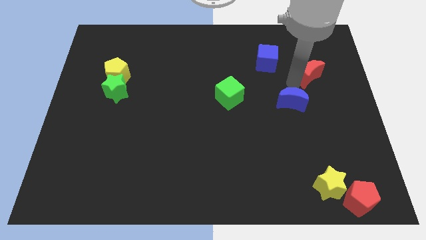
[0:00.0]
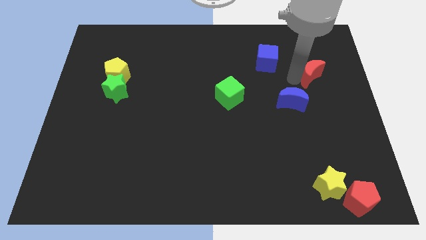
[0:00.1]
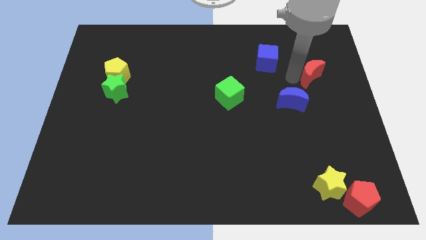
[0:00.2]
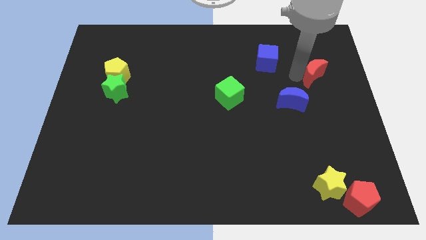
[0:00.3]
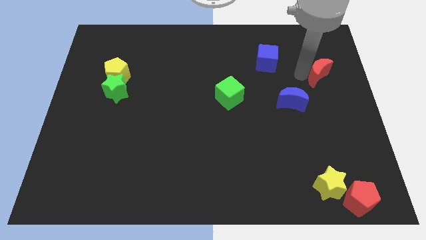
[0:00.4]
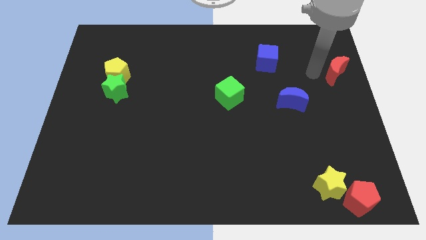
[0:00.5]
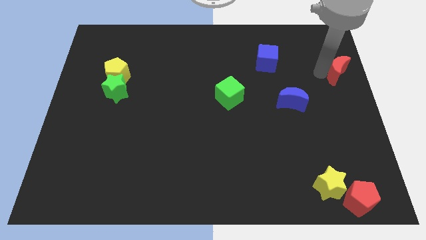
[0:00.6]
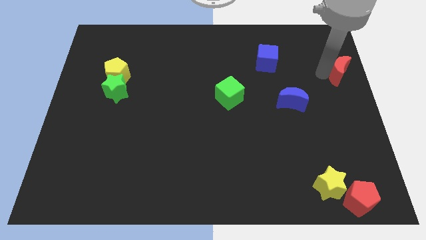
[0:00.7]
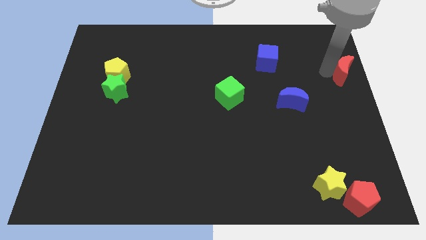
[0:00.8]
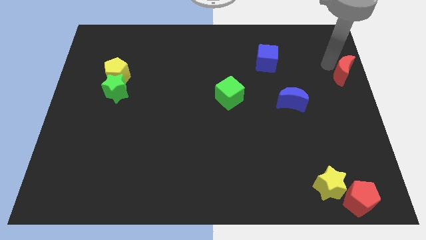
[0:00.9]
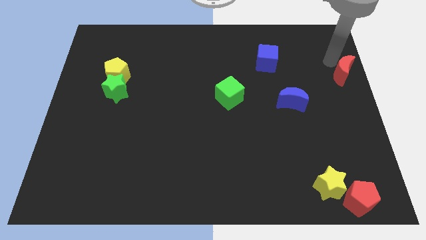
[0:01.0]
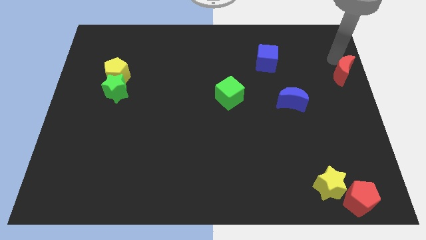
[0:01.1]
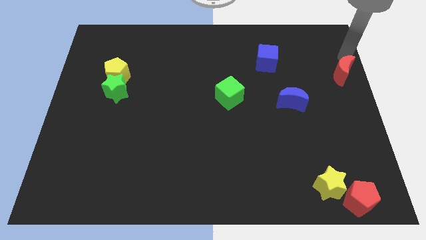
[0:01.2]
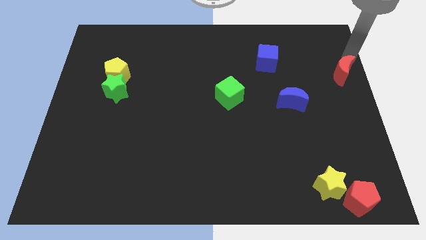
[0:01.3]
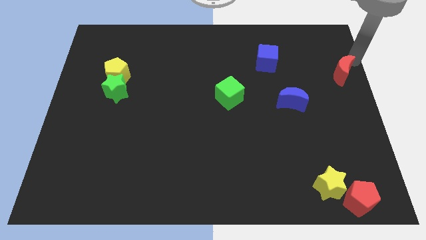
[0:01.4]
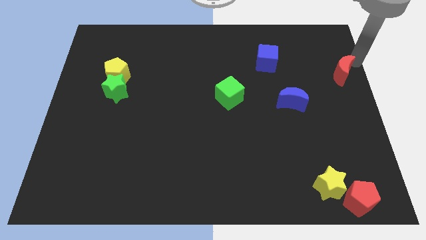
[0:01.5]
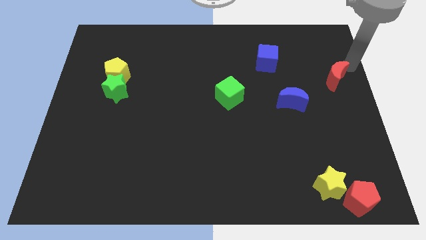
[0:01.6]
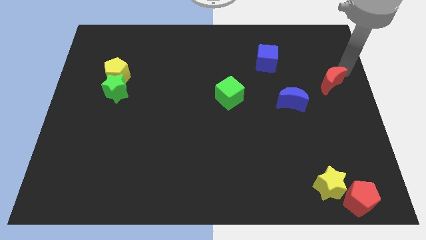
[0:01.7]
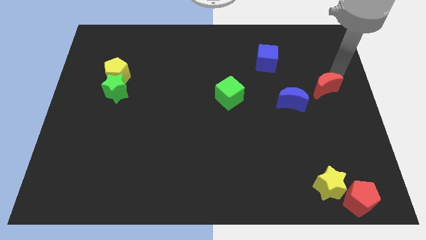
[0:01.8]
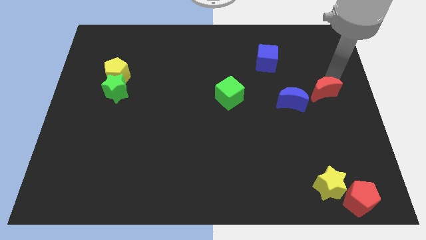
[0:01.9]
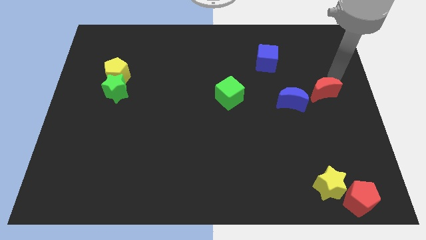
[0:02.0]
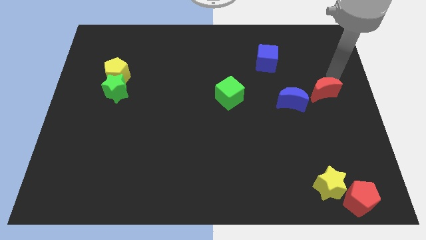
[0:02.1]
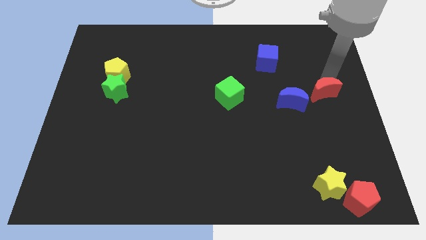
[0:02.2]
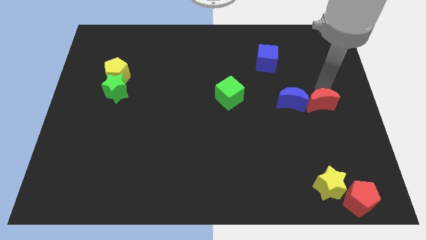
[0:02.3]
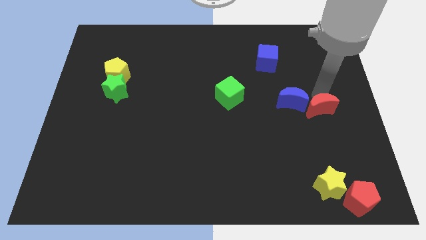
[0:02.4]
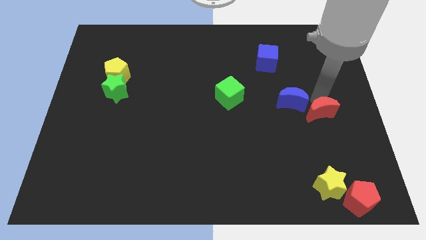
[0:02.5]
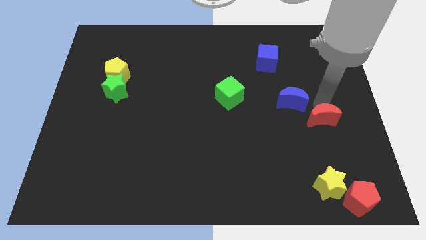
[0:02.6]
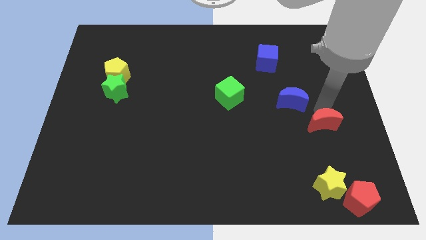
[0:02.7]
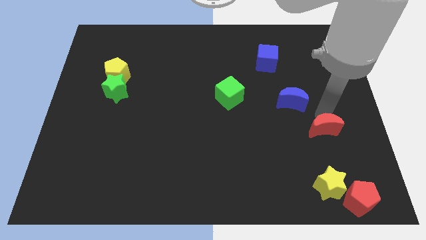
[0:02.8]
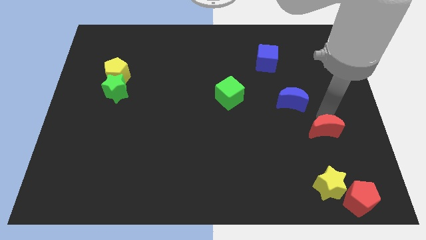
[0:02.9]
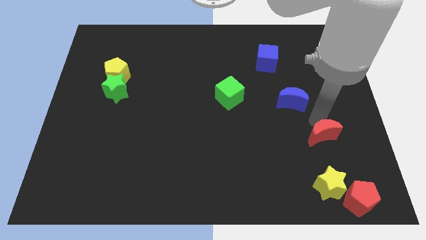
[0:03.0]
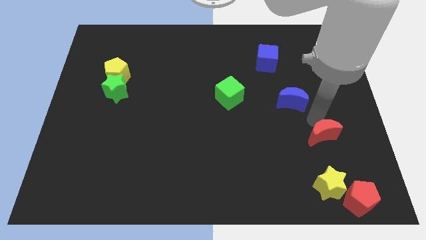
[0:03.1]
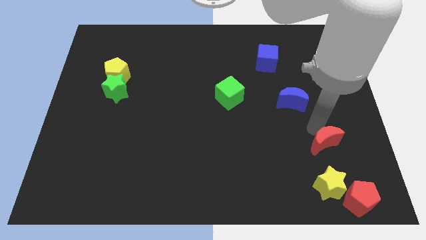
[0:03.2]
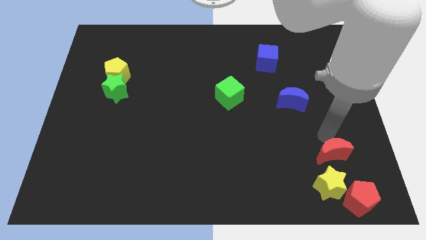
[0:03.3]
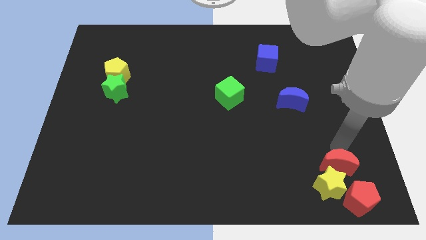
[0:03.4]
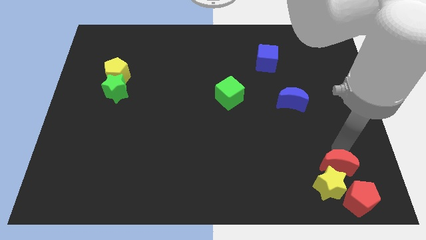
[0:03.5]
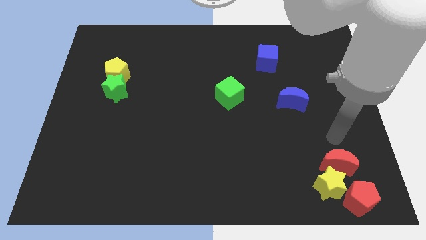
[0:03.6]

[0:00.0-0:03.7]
place the red moon at the top of yellow star

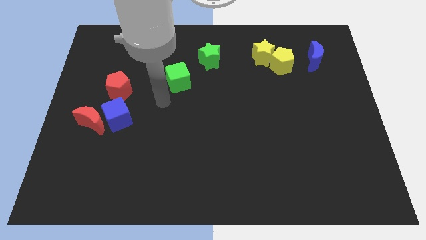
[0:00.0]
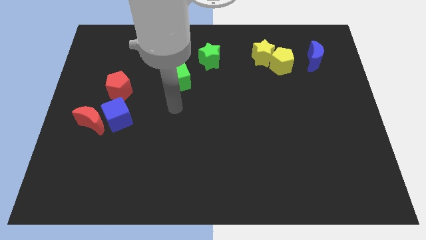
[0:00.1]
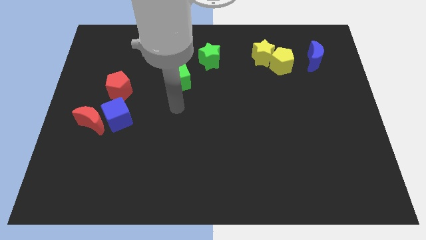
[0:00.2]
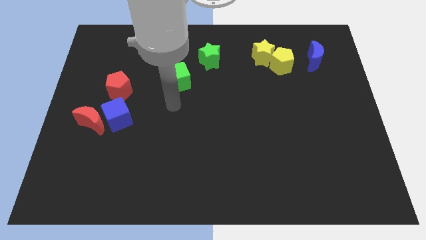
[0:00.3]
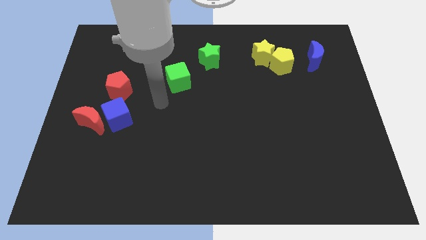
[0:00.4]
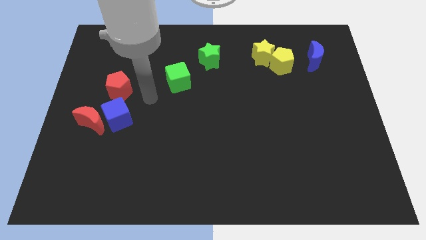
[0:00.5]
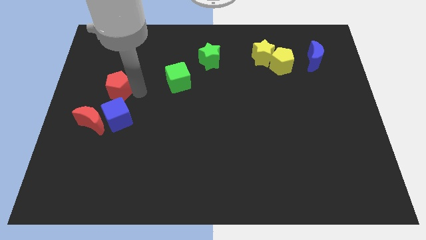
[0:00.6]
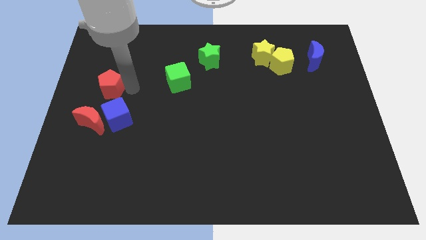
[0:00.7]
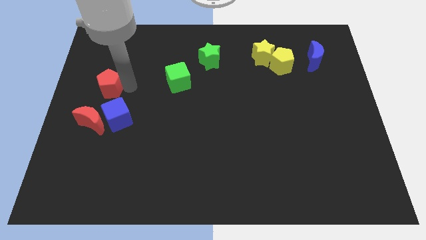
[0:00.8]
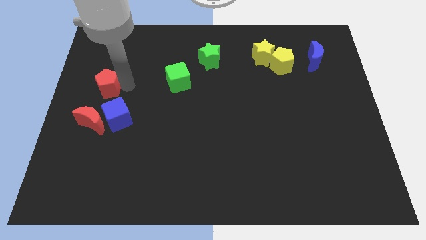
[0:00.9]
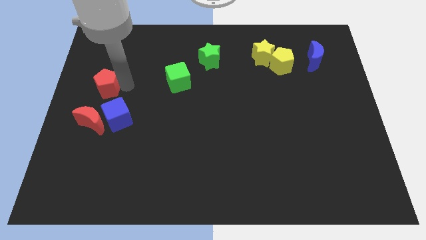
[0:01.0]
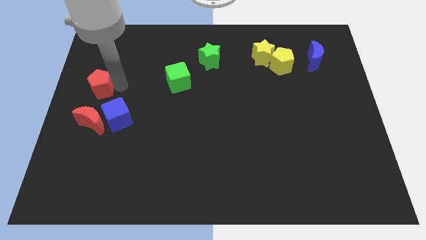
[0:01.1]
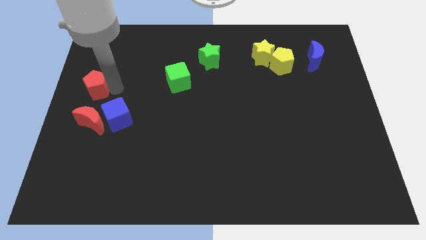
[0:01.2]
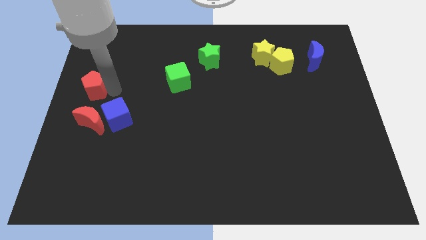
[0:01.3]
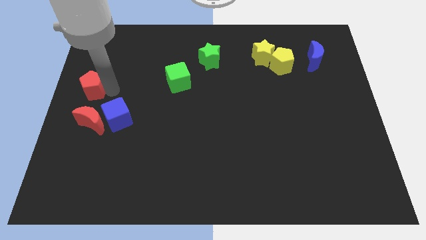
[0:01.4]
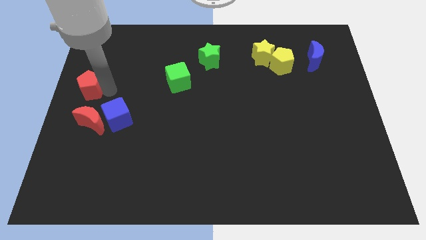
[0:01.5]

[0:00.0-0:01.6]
move red pentagon to the left center of the board

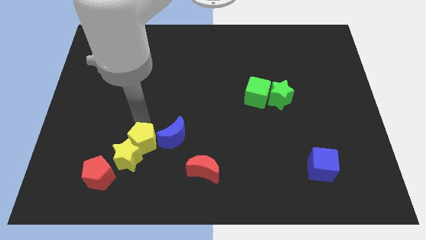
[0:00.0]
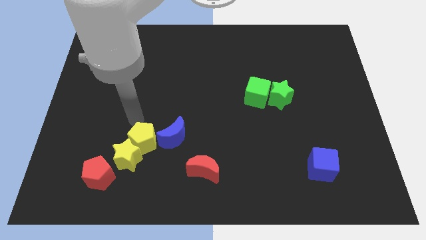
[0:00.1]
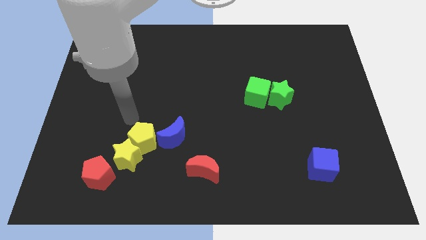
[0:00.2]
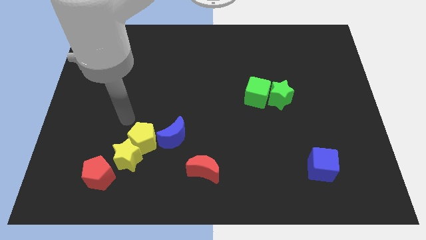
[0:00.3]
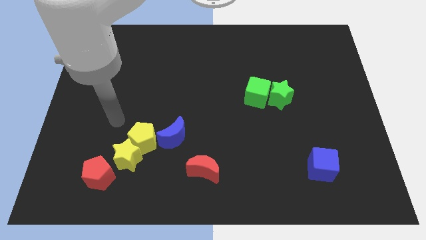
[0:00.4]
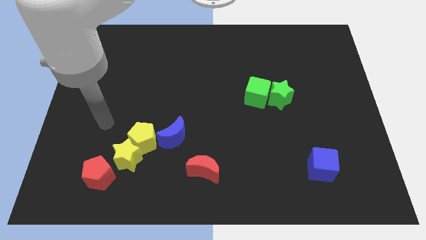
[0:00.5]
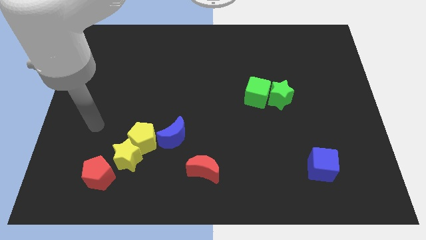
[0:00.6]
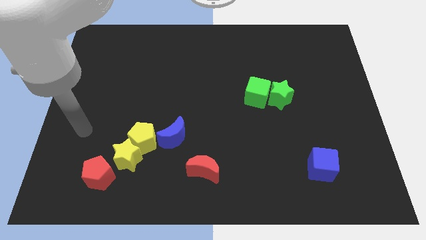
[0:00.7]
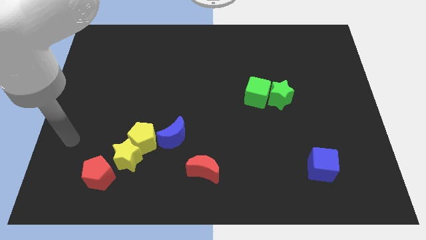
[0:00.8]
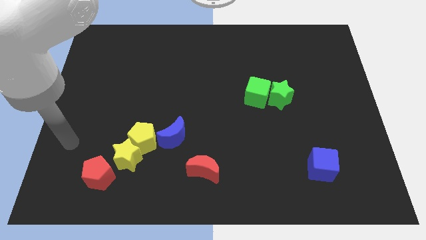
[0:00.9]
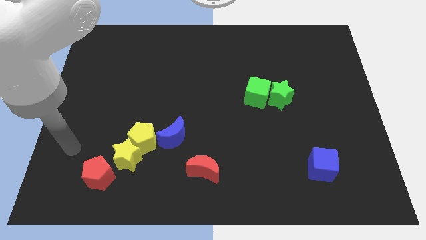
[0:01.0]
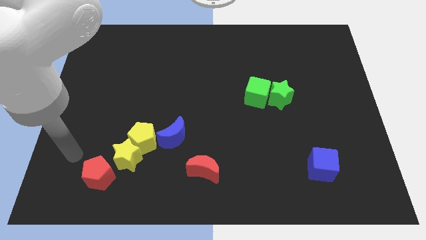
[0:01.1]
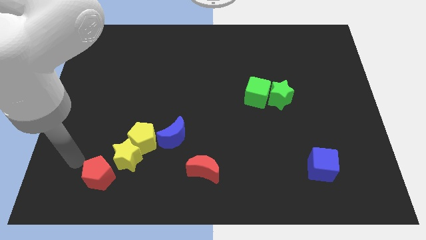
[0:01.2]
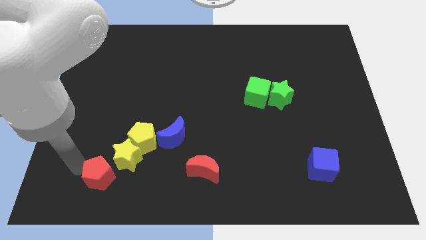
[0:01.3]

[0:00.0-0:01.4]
move arm near red pentagon

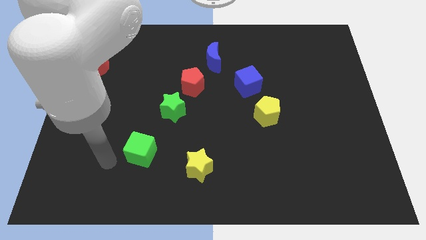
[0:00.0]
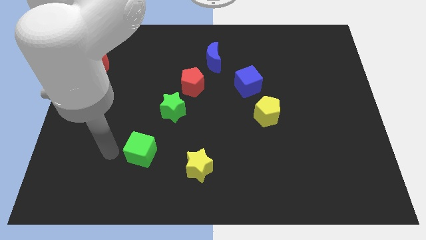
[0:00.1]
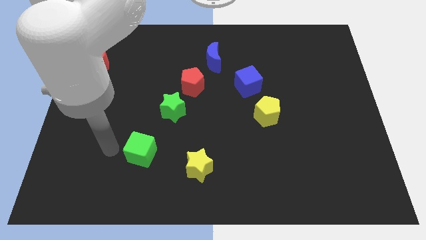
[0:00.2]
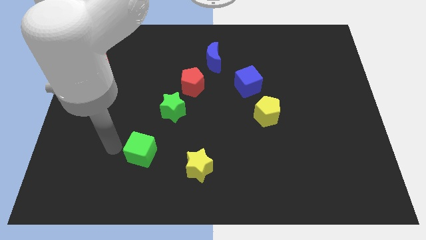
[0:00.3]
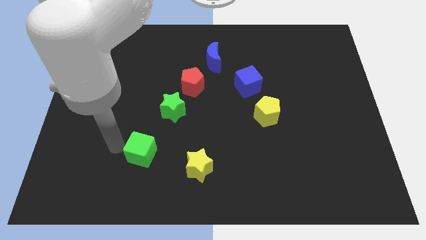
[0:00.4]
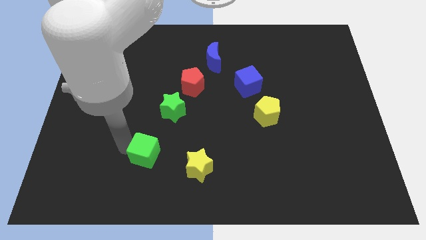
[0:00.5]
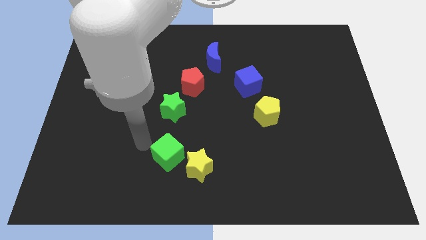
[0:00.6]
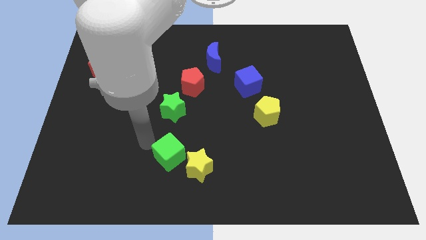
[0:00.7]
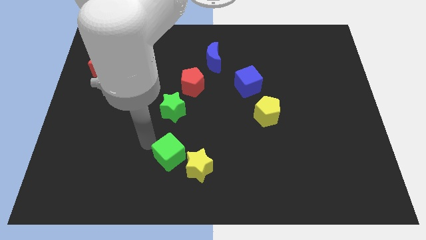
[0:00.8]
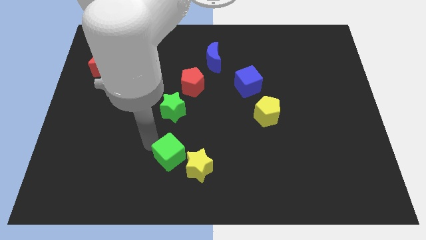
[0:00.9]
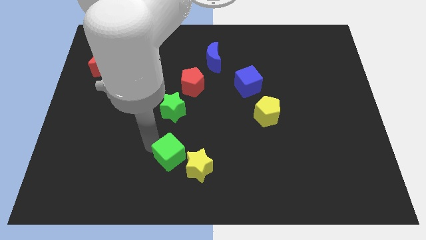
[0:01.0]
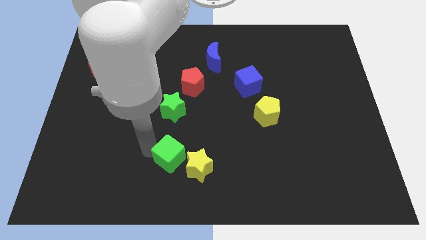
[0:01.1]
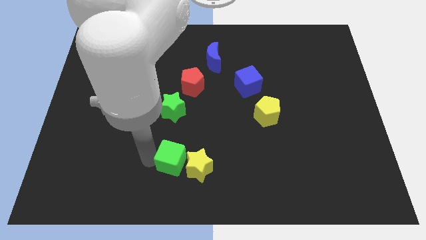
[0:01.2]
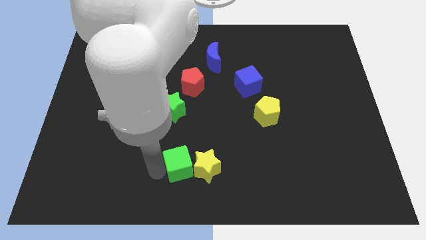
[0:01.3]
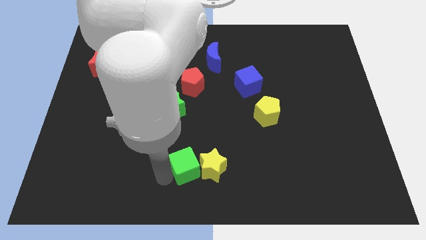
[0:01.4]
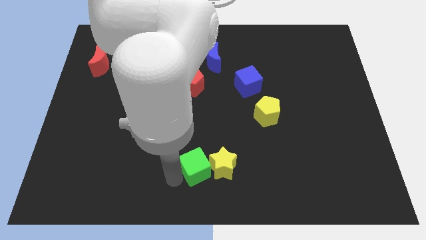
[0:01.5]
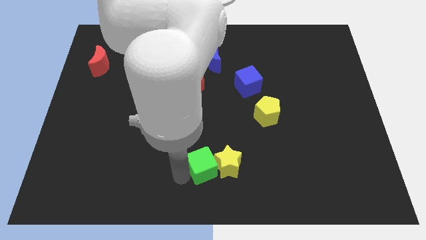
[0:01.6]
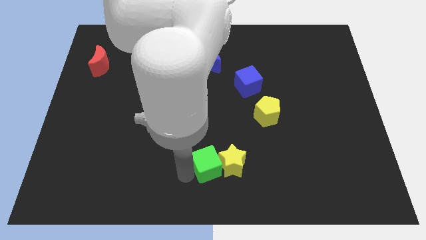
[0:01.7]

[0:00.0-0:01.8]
push the green cube into the yellow star

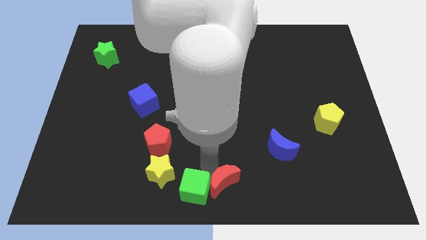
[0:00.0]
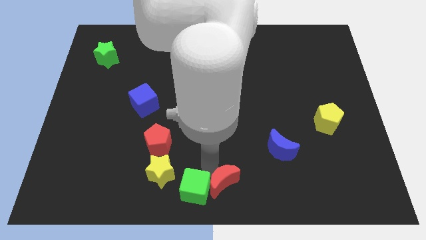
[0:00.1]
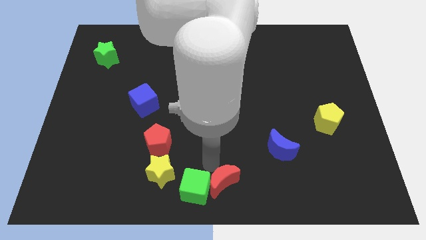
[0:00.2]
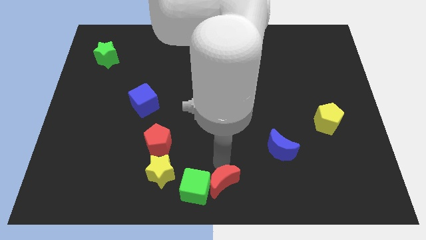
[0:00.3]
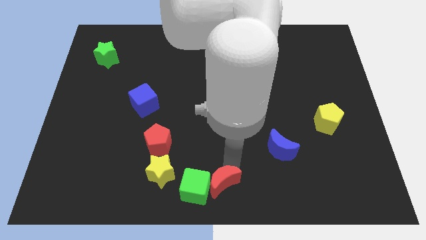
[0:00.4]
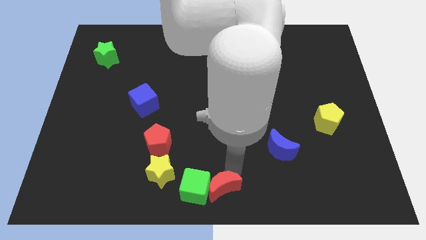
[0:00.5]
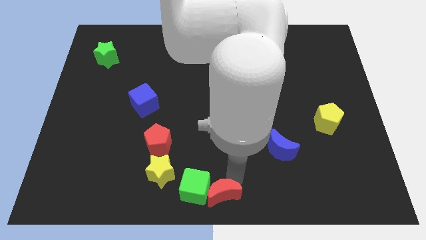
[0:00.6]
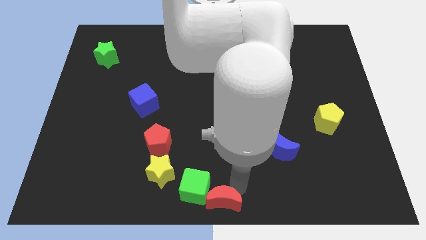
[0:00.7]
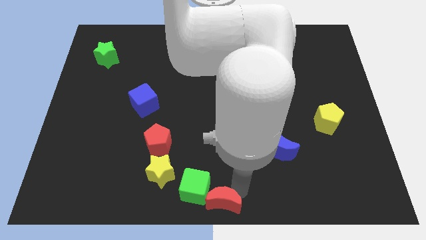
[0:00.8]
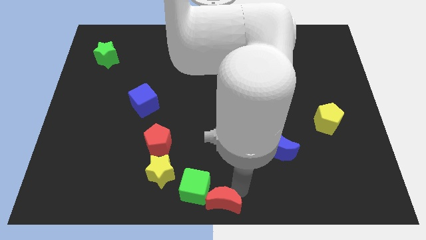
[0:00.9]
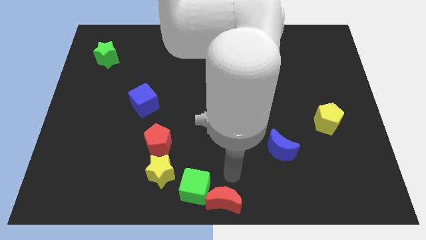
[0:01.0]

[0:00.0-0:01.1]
move the red moon to the bottom center
